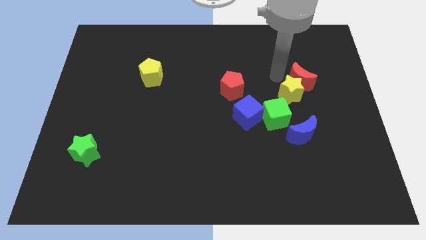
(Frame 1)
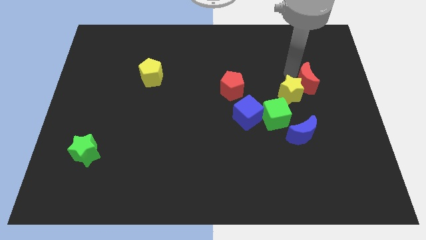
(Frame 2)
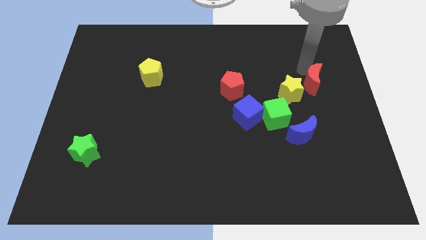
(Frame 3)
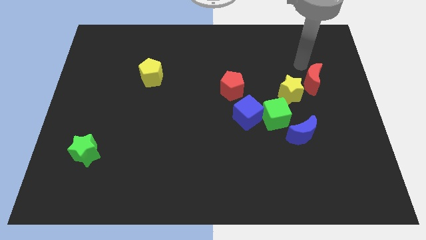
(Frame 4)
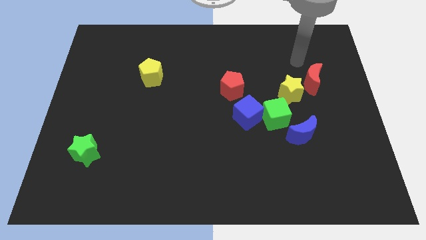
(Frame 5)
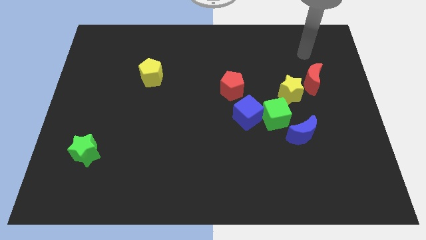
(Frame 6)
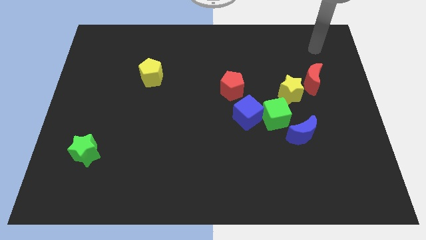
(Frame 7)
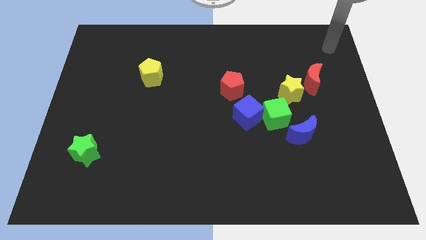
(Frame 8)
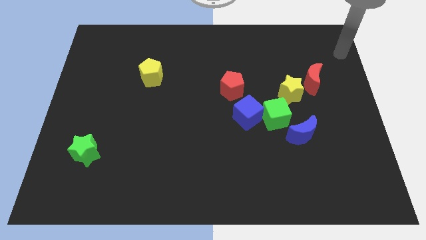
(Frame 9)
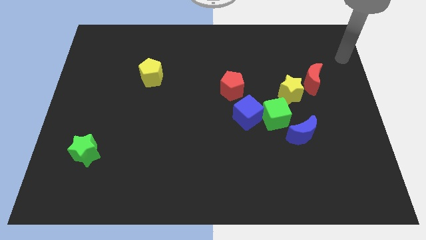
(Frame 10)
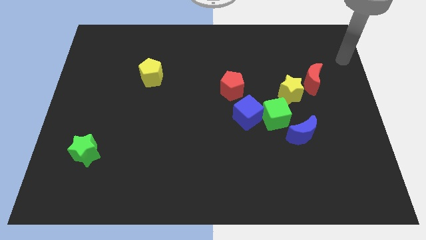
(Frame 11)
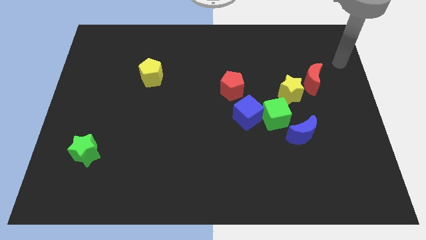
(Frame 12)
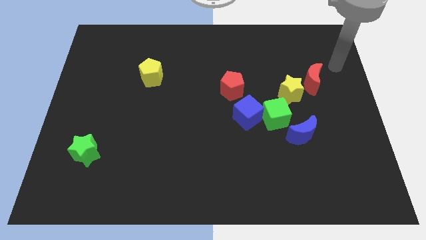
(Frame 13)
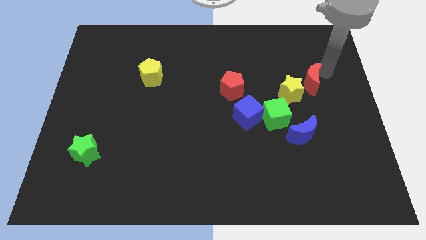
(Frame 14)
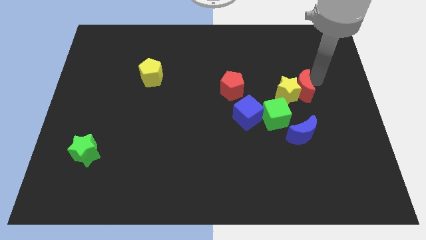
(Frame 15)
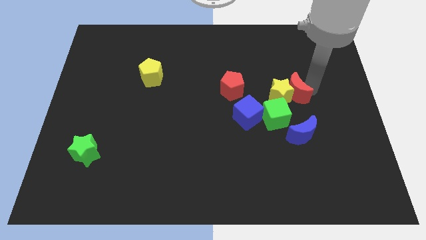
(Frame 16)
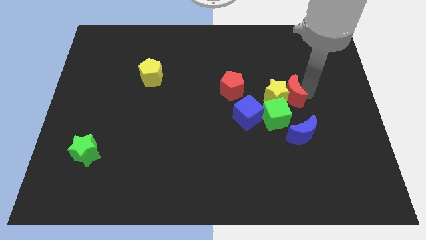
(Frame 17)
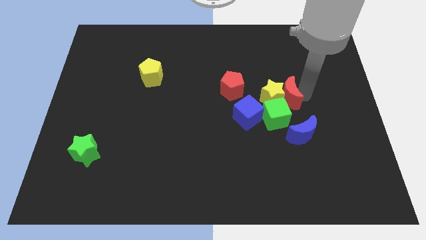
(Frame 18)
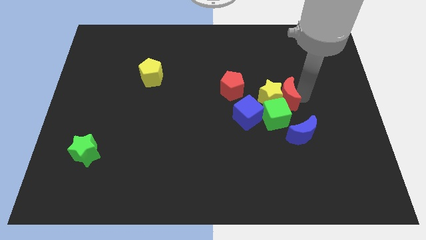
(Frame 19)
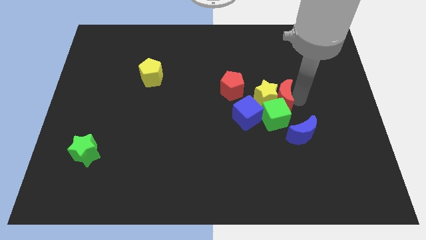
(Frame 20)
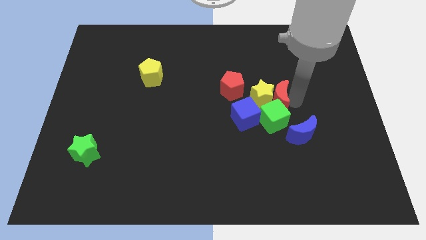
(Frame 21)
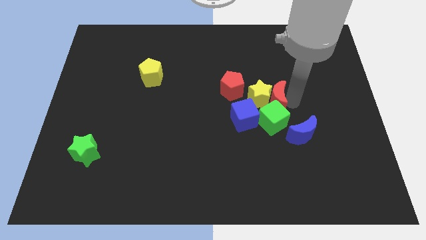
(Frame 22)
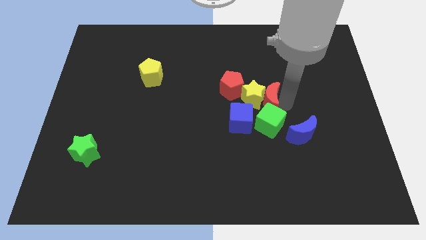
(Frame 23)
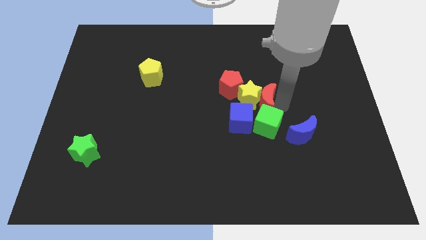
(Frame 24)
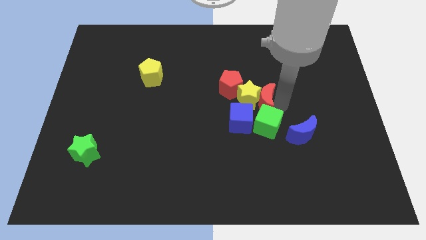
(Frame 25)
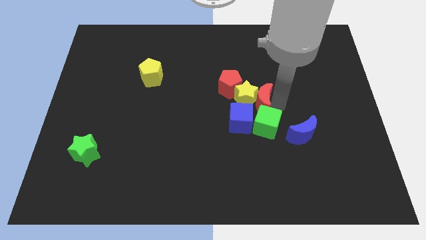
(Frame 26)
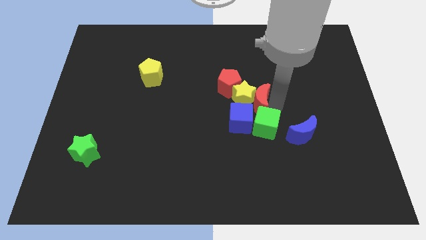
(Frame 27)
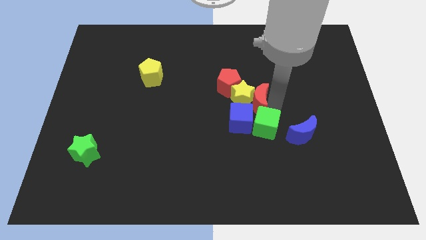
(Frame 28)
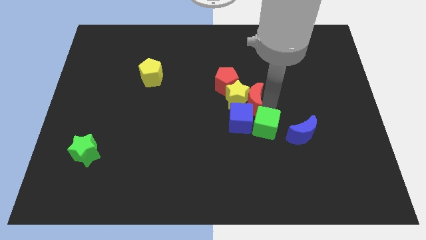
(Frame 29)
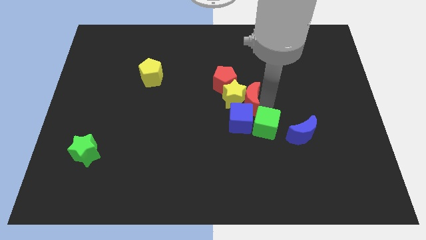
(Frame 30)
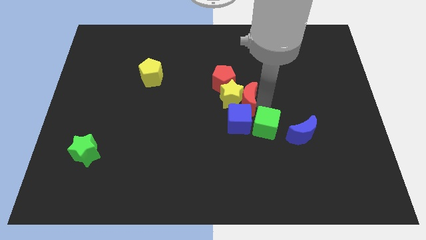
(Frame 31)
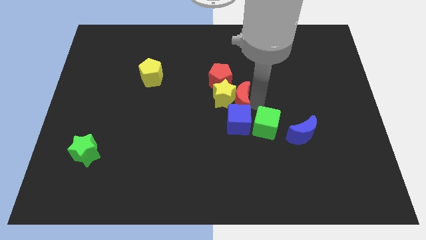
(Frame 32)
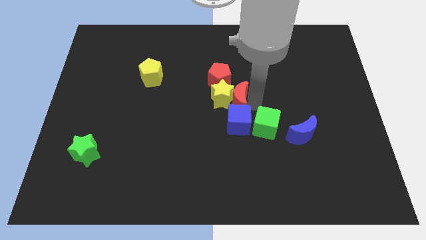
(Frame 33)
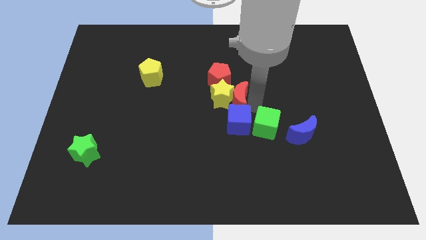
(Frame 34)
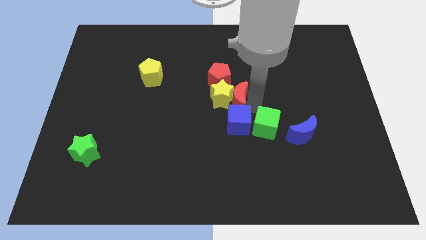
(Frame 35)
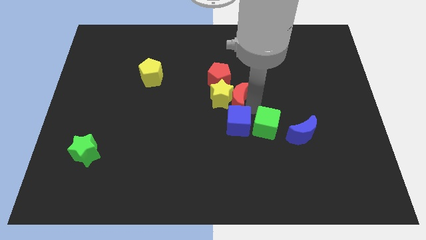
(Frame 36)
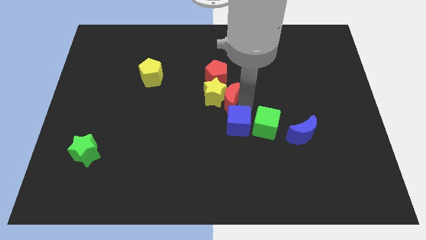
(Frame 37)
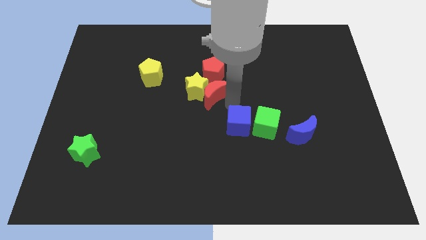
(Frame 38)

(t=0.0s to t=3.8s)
push all the both the red blocks and yellow star to the center of the board

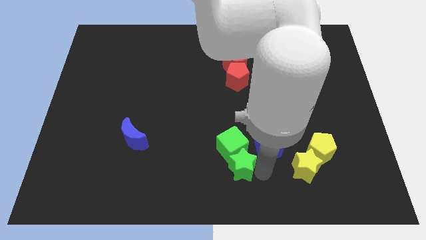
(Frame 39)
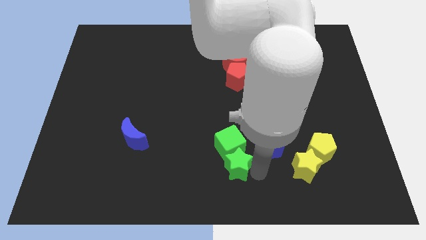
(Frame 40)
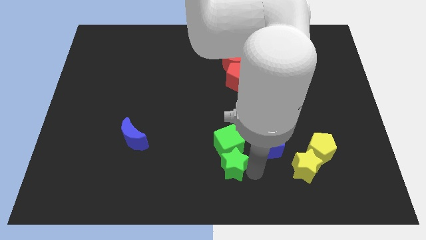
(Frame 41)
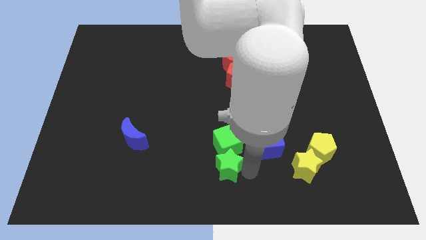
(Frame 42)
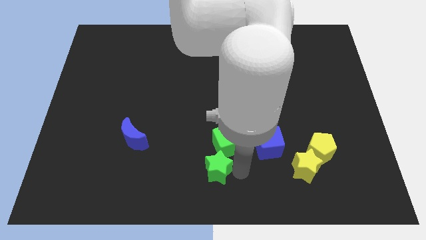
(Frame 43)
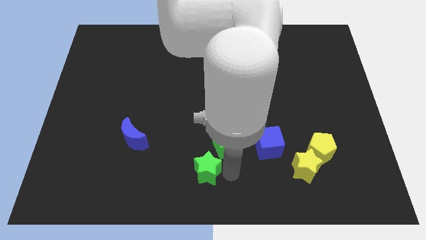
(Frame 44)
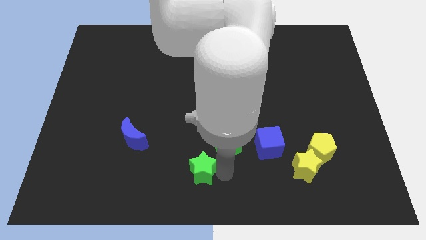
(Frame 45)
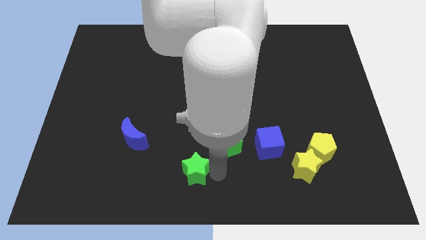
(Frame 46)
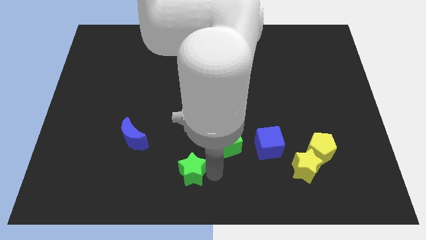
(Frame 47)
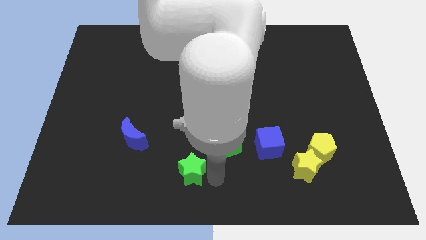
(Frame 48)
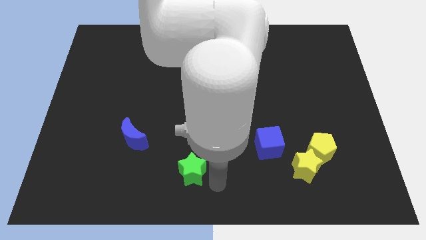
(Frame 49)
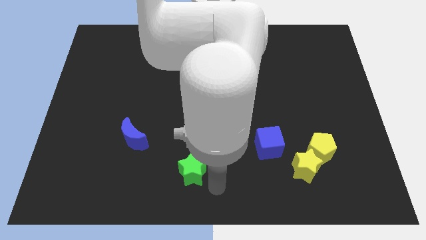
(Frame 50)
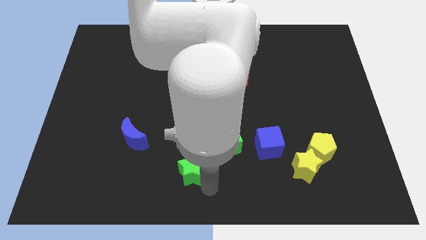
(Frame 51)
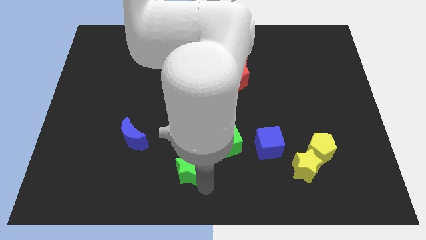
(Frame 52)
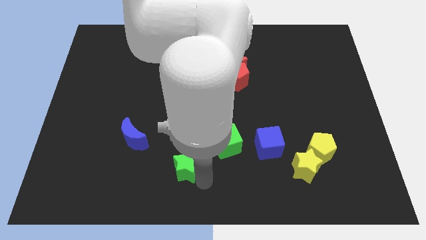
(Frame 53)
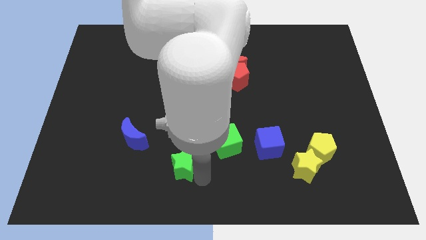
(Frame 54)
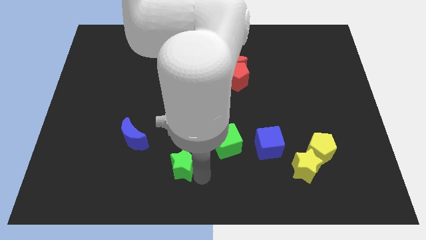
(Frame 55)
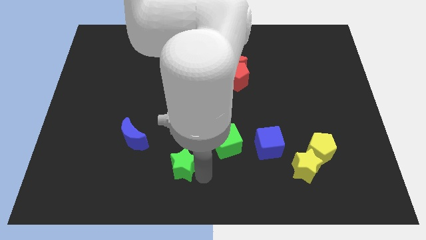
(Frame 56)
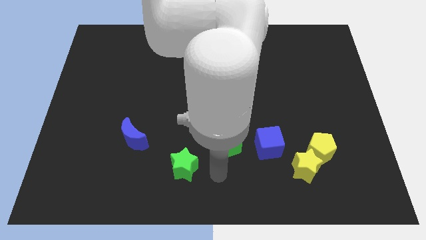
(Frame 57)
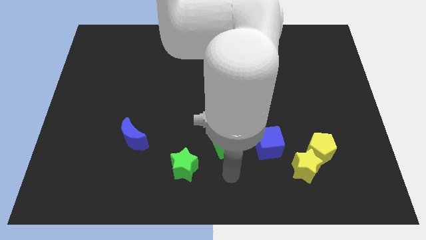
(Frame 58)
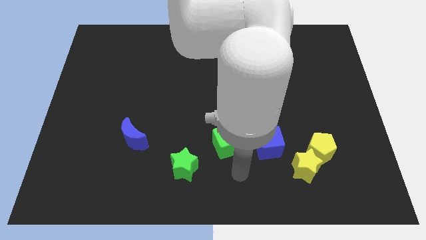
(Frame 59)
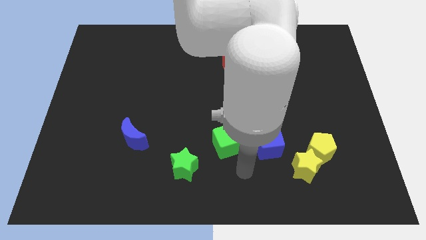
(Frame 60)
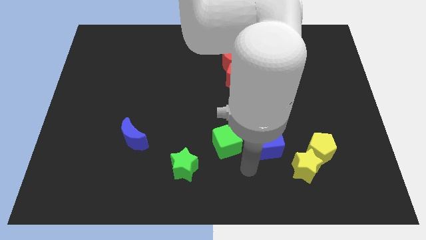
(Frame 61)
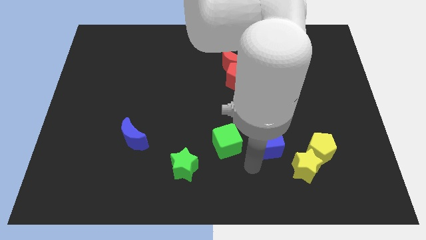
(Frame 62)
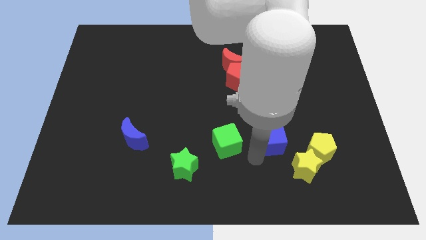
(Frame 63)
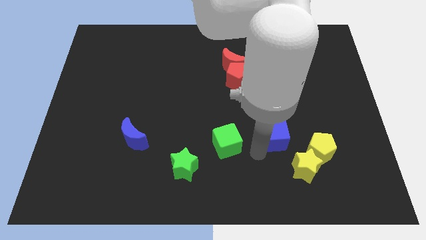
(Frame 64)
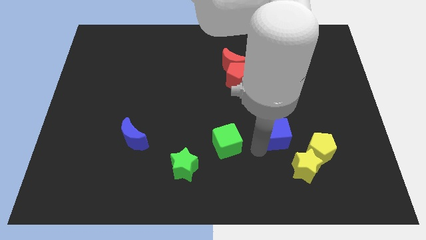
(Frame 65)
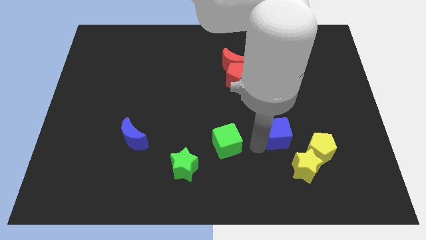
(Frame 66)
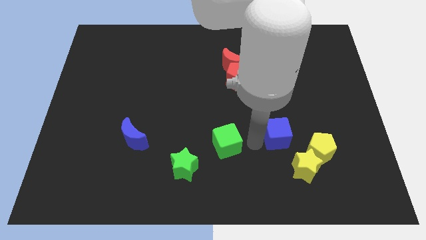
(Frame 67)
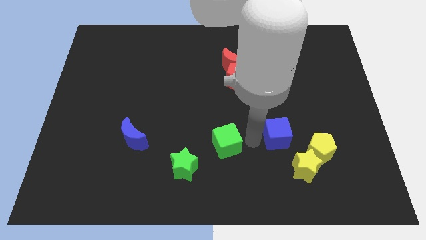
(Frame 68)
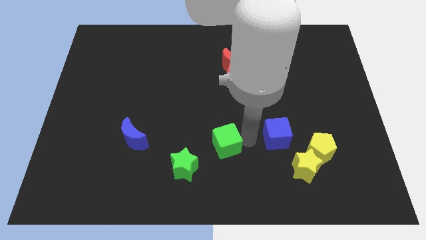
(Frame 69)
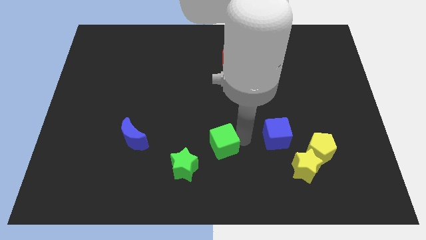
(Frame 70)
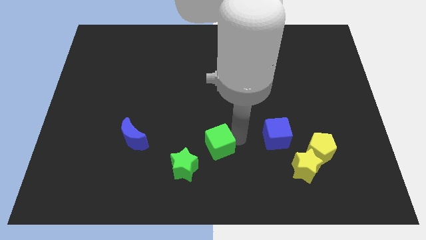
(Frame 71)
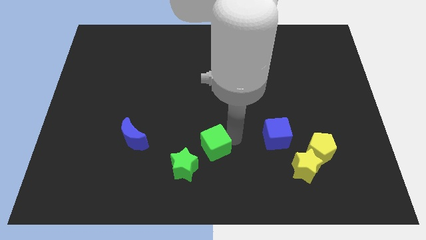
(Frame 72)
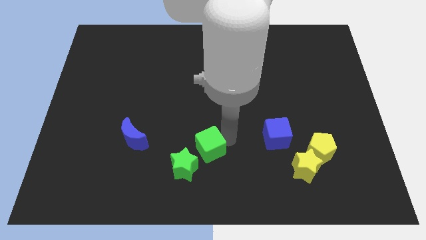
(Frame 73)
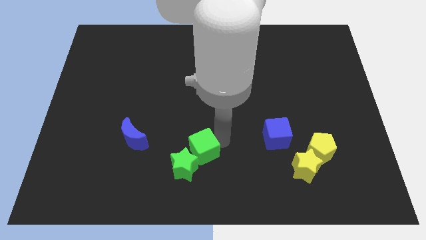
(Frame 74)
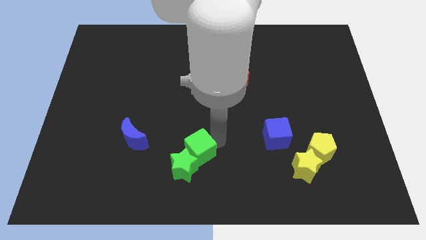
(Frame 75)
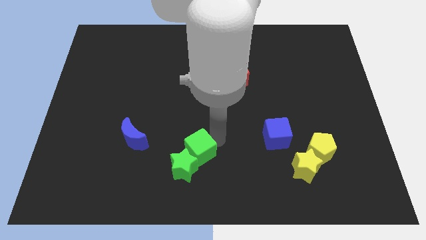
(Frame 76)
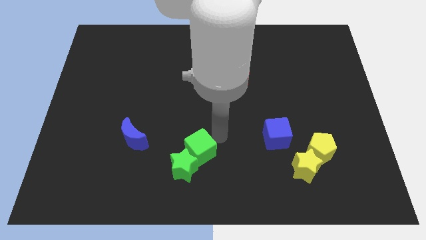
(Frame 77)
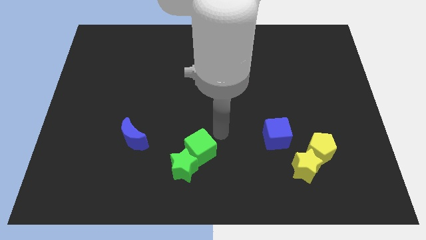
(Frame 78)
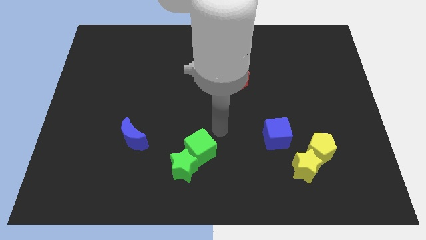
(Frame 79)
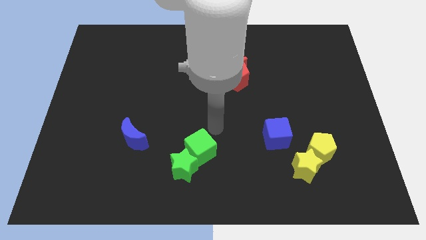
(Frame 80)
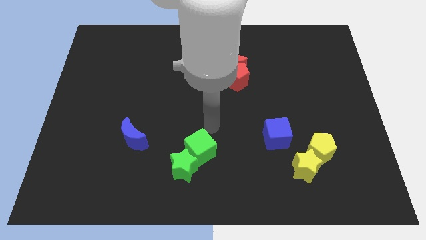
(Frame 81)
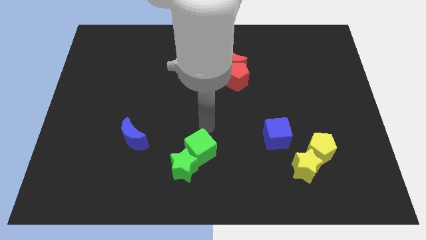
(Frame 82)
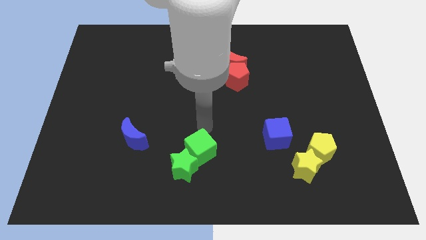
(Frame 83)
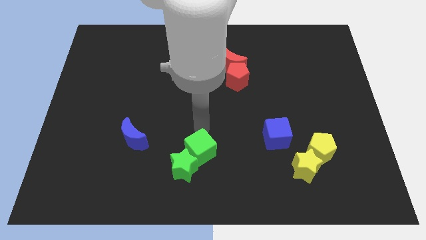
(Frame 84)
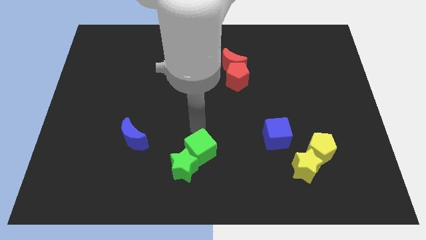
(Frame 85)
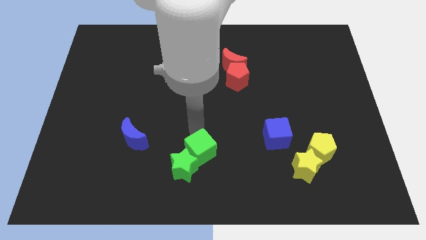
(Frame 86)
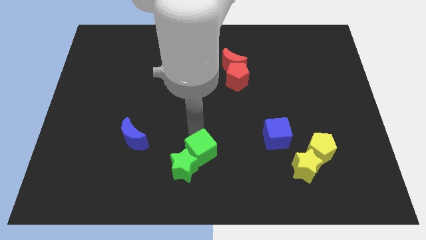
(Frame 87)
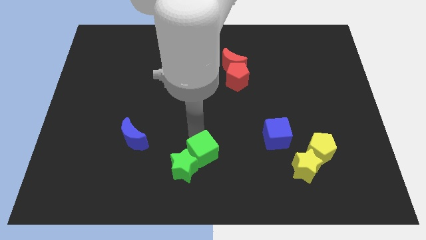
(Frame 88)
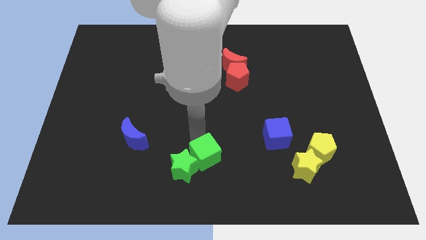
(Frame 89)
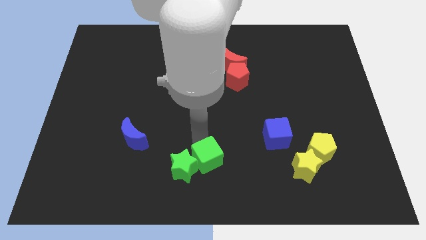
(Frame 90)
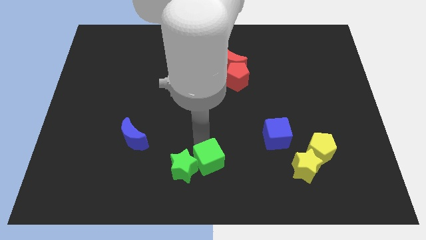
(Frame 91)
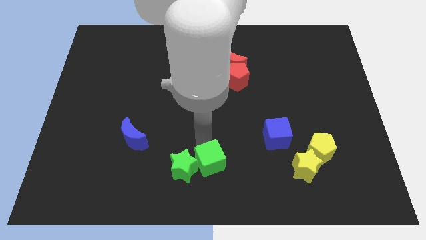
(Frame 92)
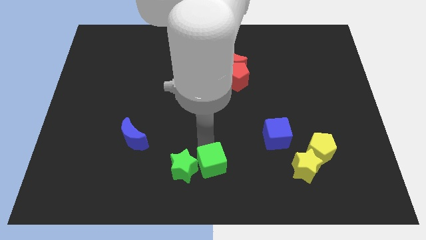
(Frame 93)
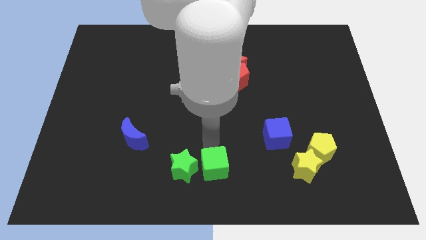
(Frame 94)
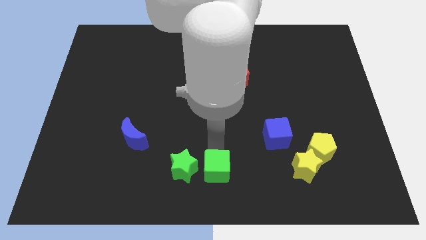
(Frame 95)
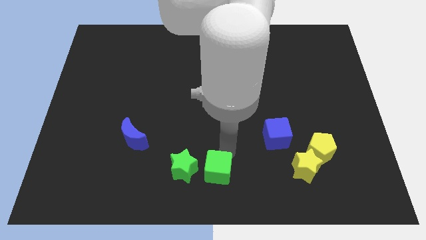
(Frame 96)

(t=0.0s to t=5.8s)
move the green cube slightly to the bottom of the board
